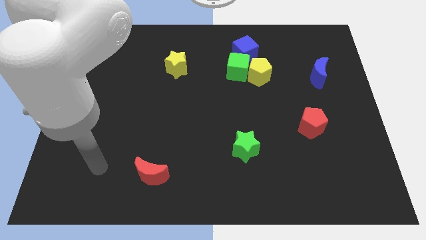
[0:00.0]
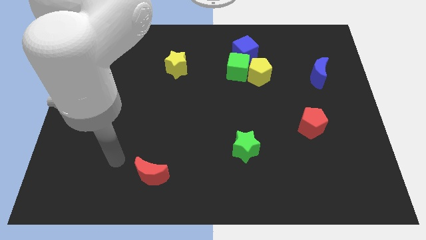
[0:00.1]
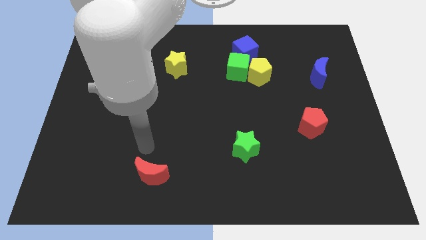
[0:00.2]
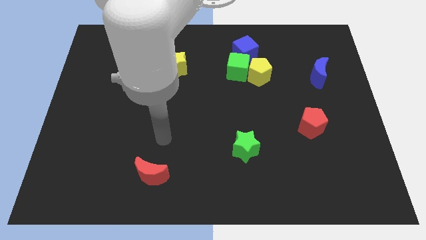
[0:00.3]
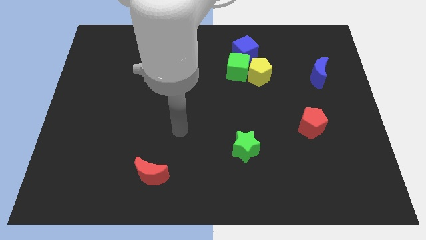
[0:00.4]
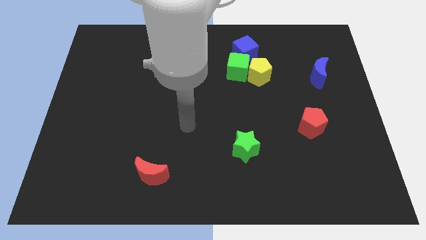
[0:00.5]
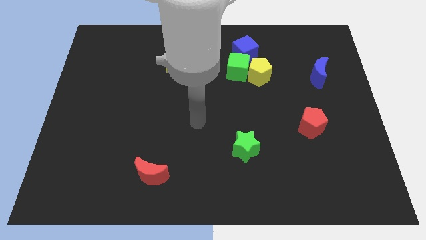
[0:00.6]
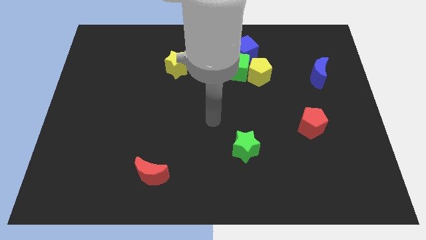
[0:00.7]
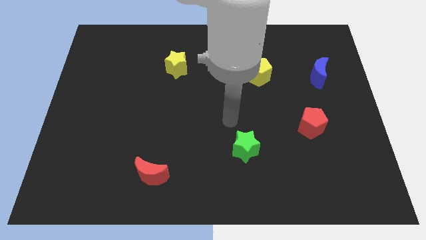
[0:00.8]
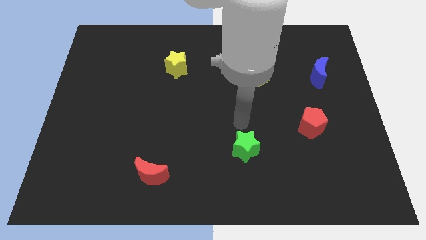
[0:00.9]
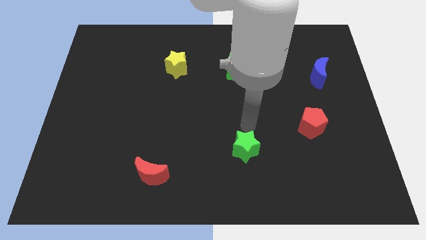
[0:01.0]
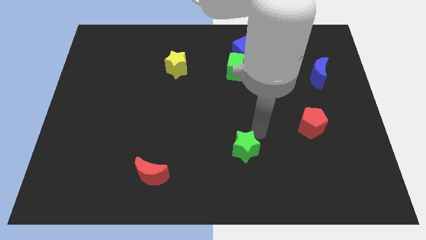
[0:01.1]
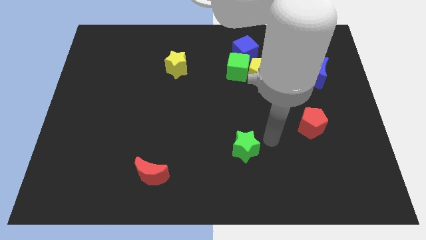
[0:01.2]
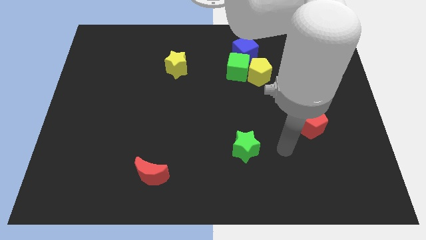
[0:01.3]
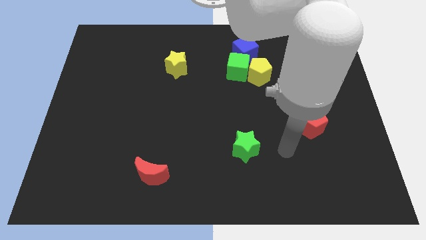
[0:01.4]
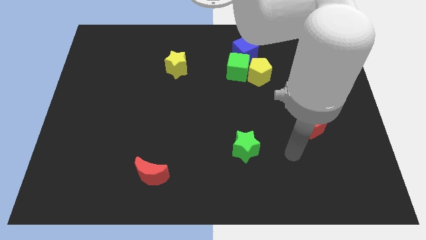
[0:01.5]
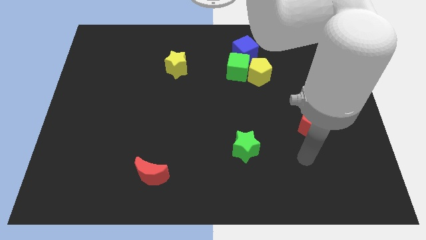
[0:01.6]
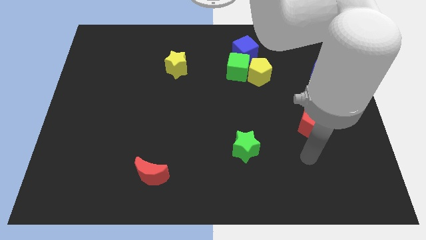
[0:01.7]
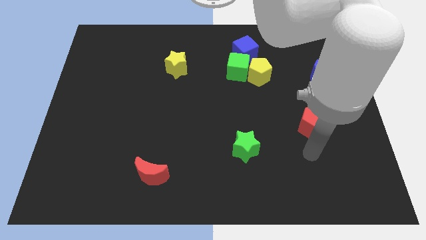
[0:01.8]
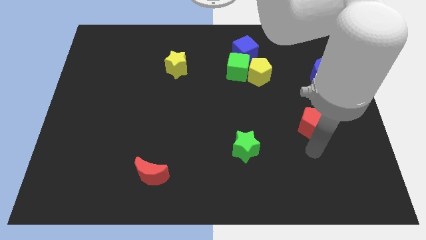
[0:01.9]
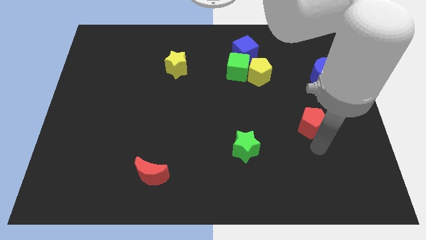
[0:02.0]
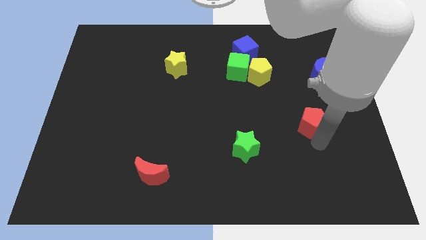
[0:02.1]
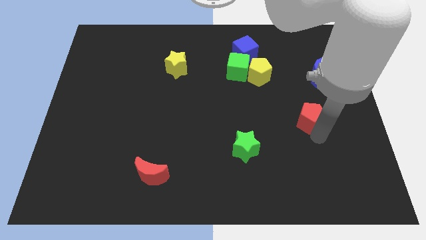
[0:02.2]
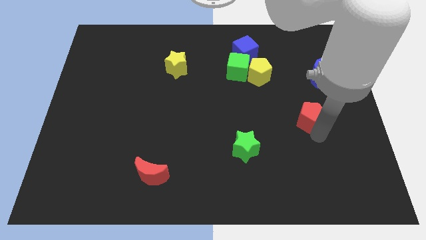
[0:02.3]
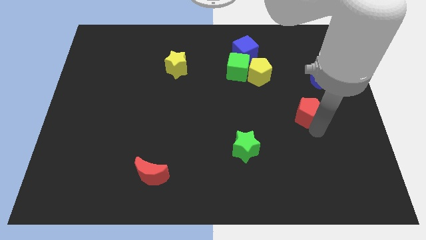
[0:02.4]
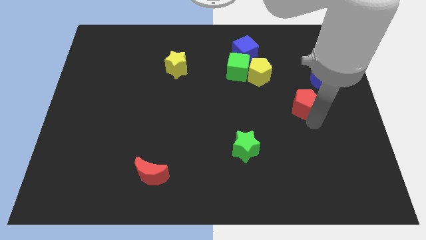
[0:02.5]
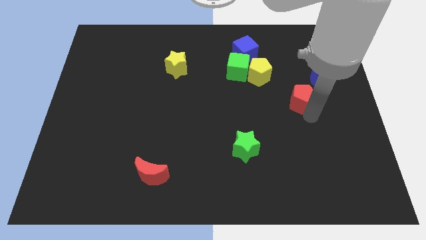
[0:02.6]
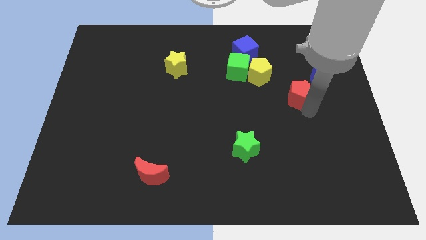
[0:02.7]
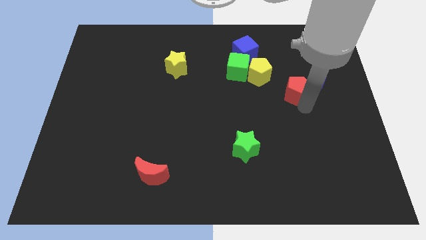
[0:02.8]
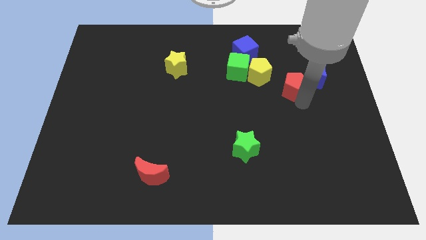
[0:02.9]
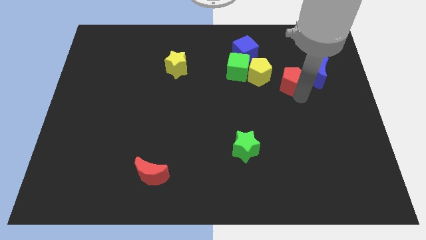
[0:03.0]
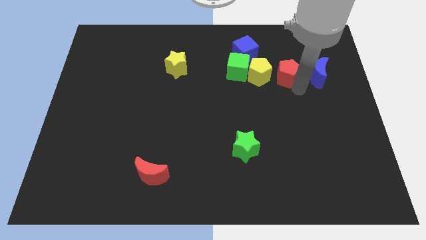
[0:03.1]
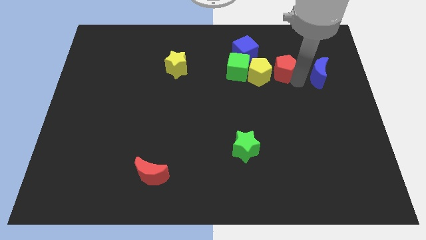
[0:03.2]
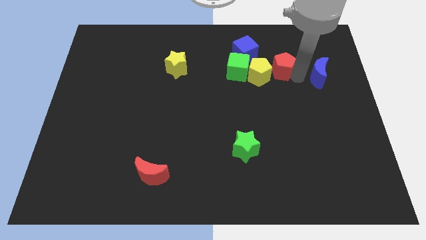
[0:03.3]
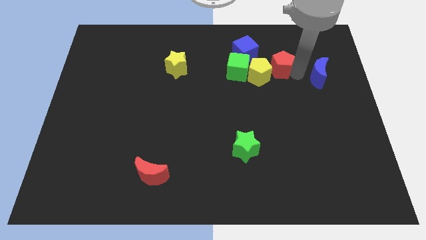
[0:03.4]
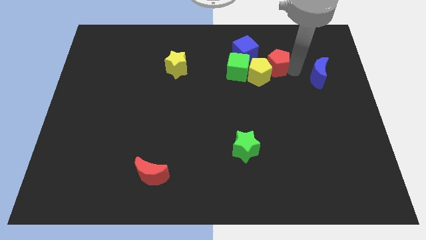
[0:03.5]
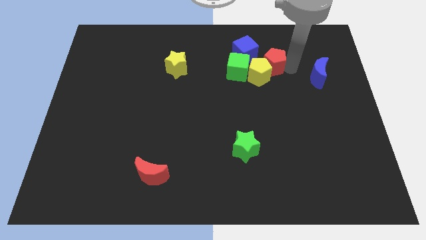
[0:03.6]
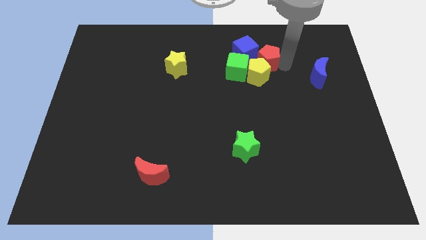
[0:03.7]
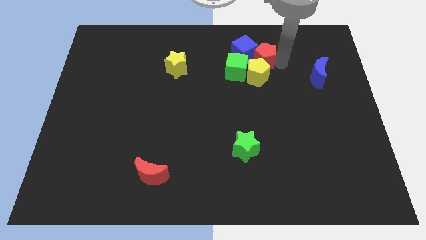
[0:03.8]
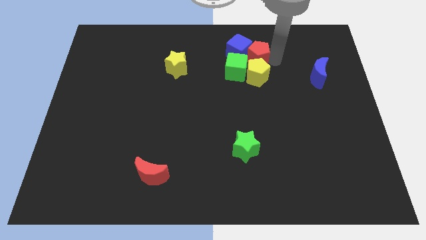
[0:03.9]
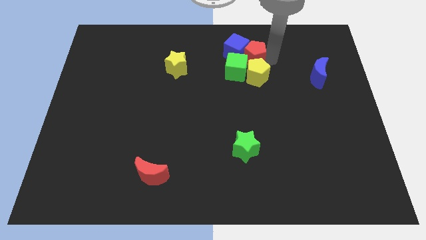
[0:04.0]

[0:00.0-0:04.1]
move the red pentagon to the blue cube

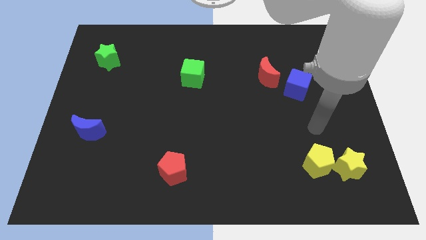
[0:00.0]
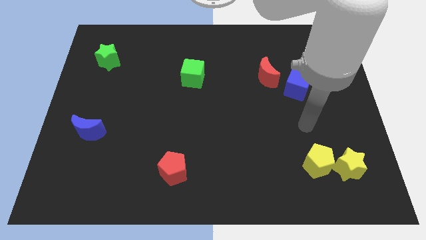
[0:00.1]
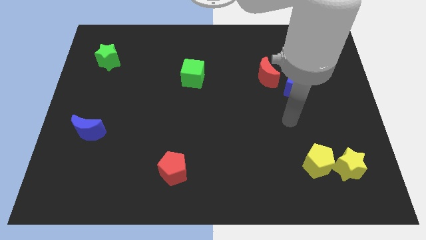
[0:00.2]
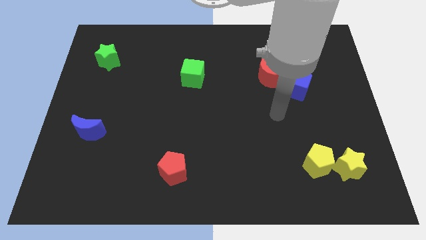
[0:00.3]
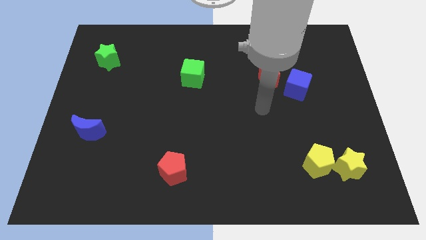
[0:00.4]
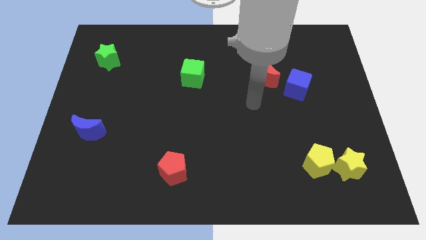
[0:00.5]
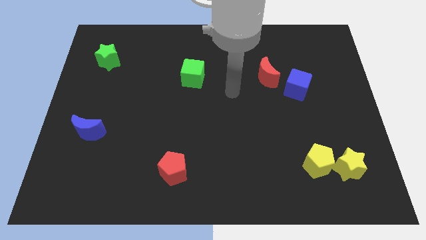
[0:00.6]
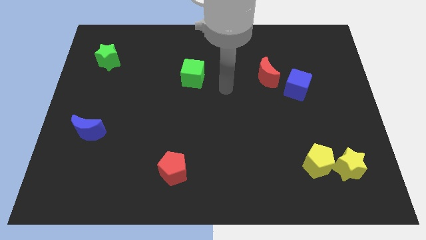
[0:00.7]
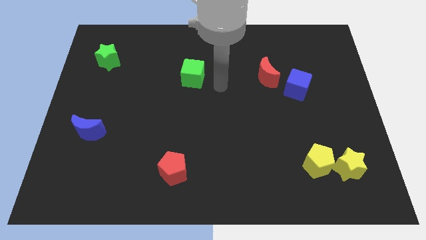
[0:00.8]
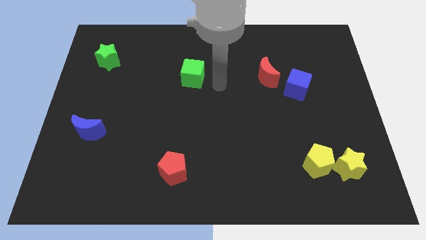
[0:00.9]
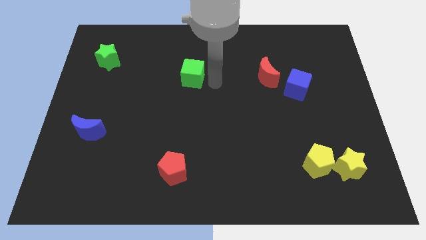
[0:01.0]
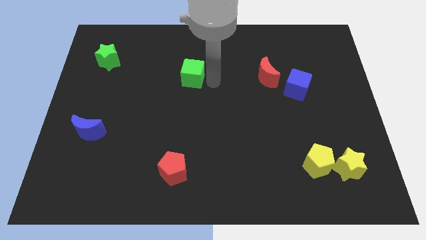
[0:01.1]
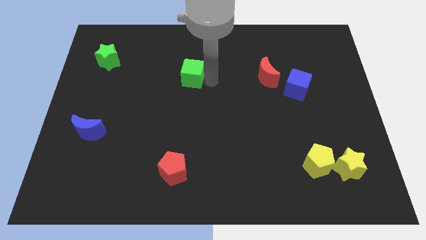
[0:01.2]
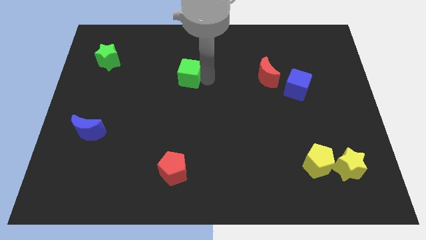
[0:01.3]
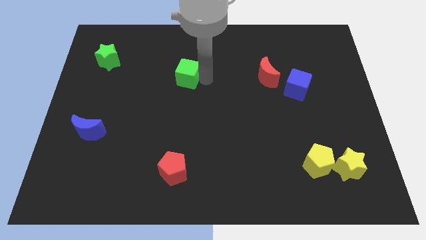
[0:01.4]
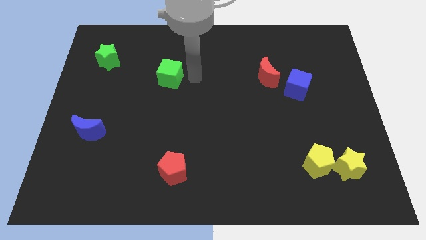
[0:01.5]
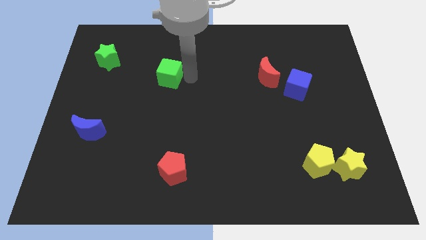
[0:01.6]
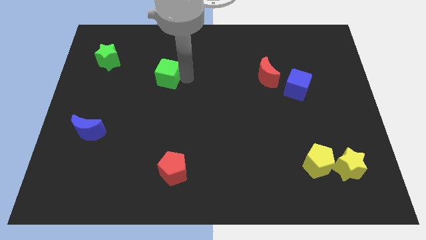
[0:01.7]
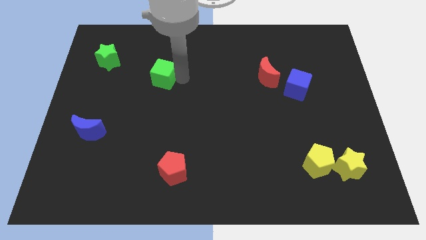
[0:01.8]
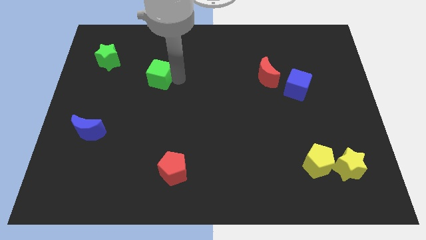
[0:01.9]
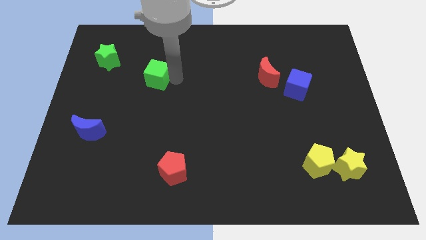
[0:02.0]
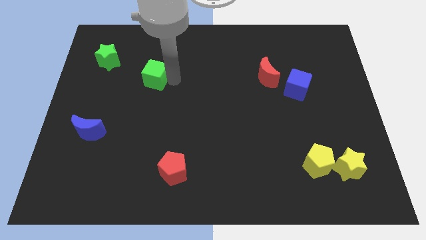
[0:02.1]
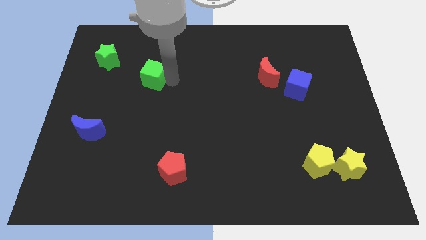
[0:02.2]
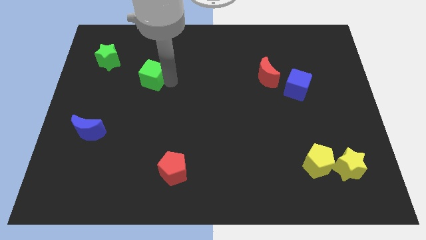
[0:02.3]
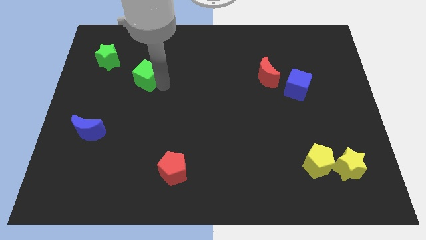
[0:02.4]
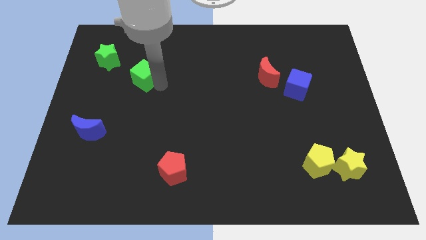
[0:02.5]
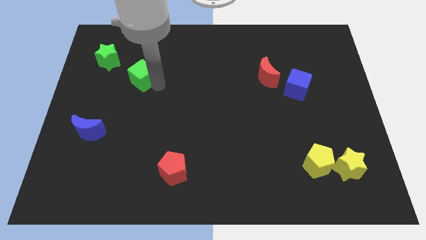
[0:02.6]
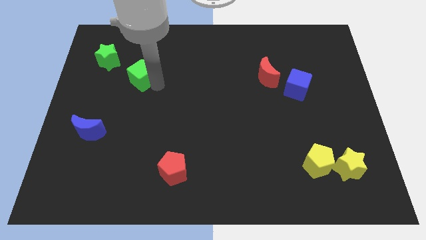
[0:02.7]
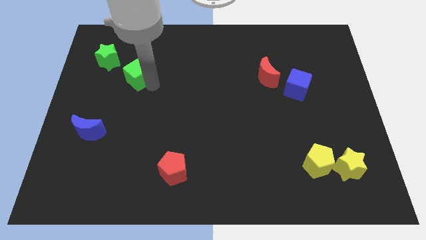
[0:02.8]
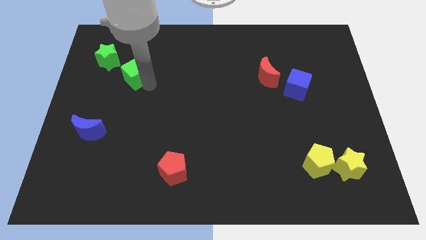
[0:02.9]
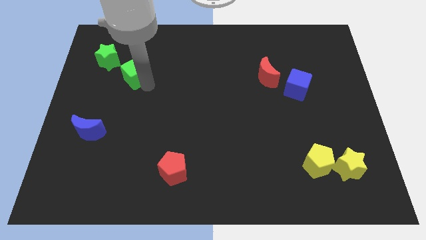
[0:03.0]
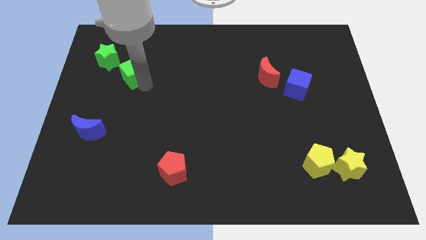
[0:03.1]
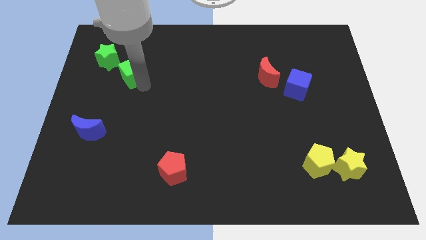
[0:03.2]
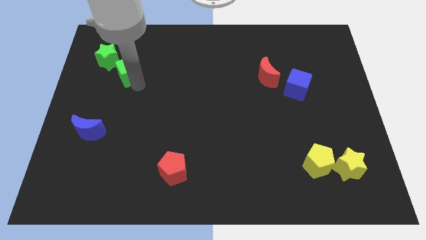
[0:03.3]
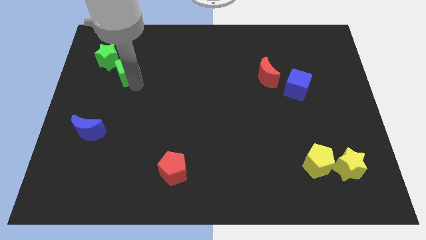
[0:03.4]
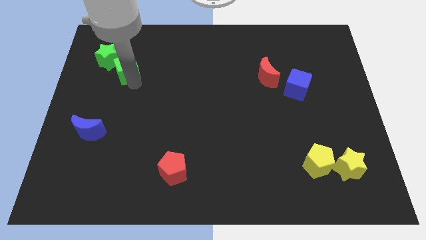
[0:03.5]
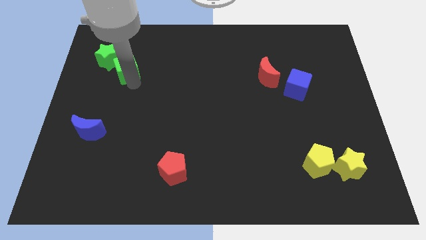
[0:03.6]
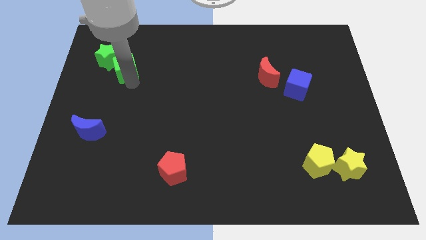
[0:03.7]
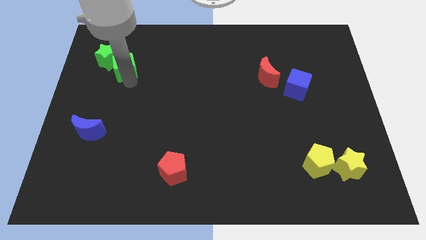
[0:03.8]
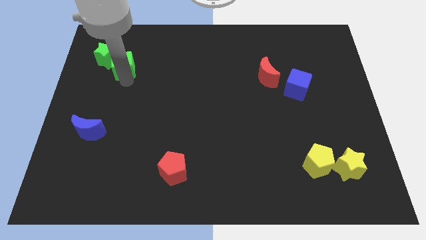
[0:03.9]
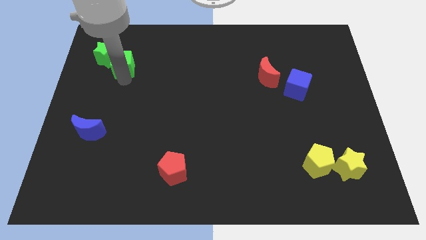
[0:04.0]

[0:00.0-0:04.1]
slide the green cube next to the green star
